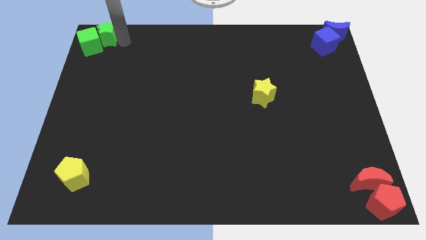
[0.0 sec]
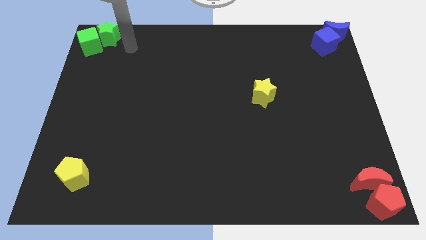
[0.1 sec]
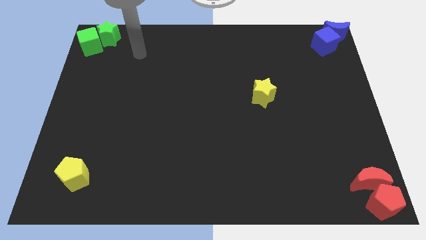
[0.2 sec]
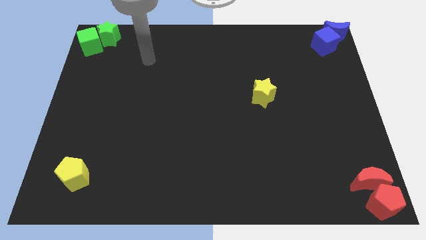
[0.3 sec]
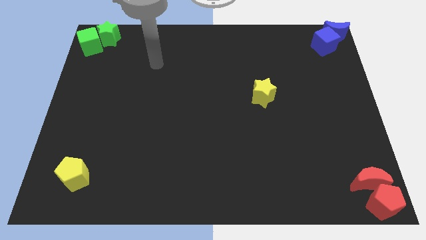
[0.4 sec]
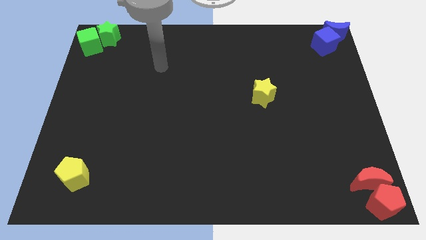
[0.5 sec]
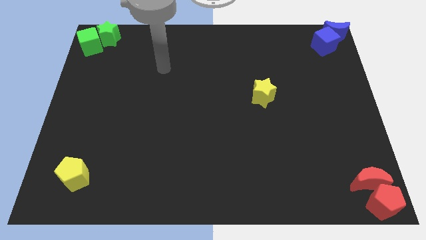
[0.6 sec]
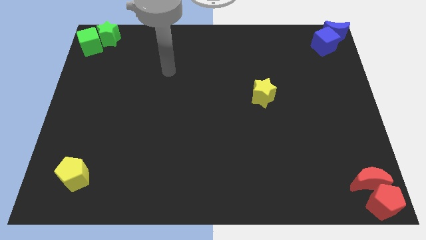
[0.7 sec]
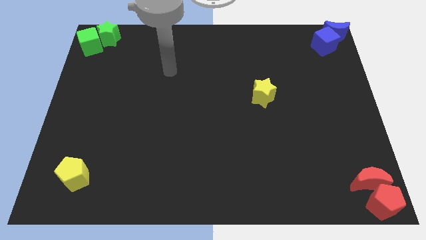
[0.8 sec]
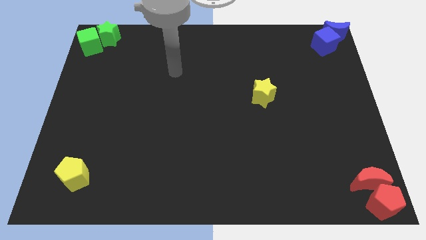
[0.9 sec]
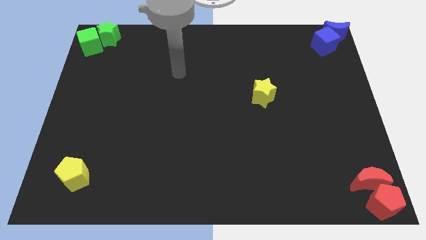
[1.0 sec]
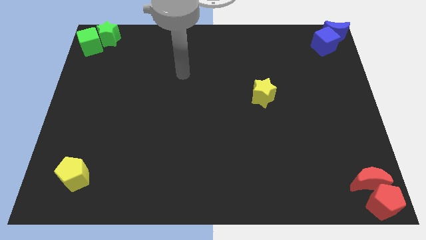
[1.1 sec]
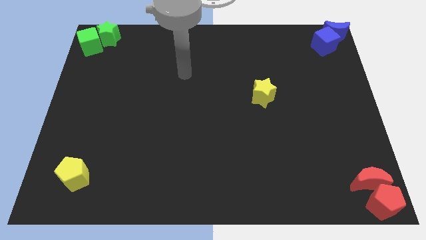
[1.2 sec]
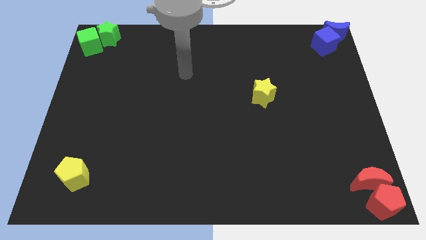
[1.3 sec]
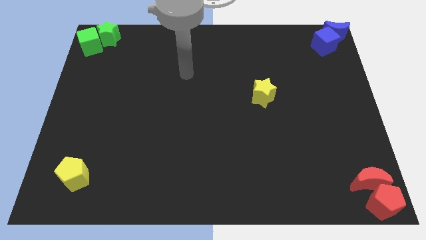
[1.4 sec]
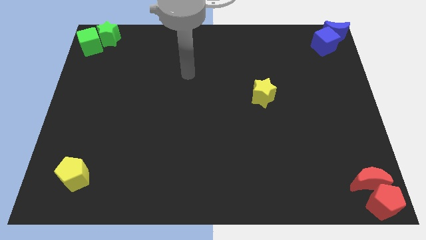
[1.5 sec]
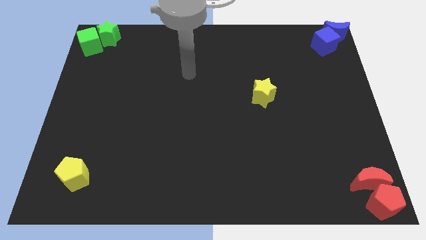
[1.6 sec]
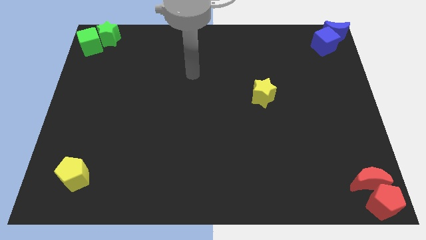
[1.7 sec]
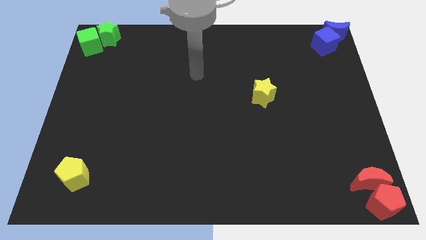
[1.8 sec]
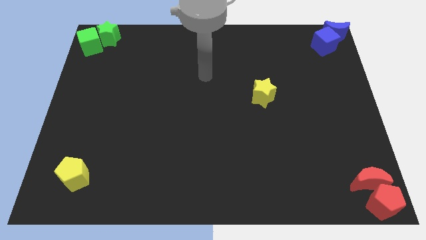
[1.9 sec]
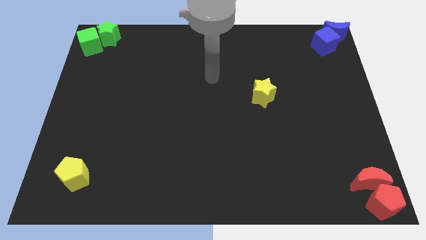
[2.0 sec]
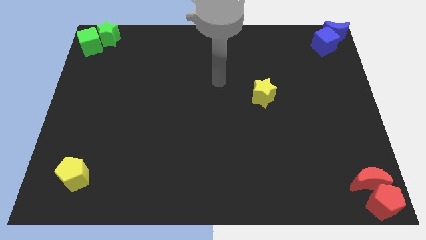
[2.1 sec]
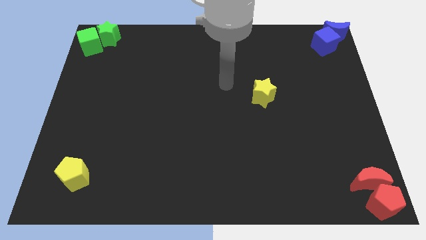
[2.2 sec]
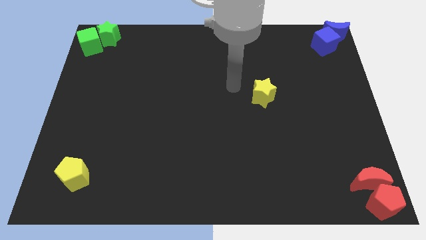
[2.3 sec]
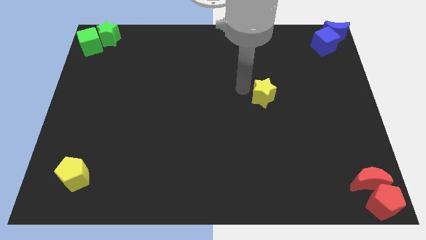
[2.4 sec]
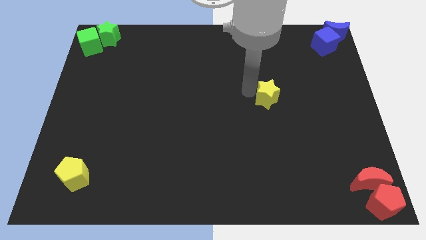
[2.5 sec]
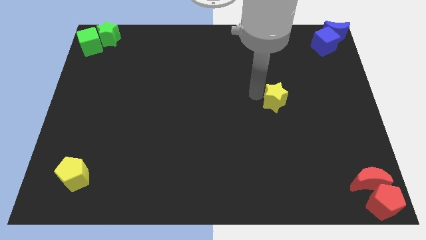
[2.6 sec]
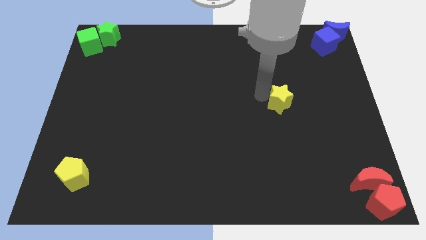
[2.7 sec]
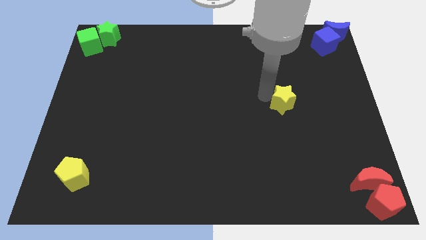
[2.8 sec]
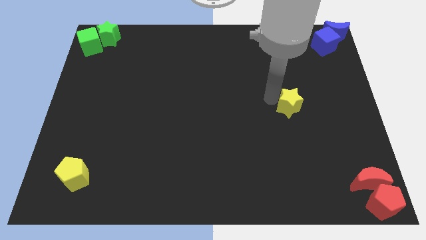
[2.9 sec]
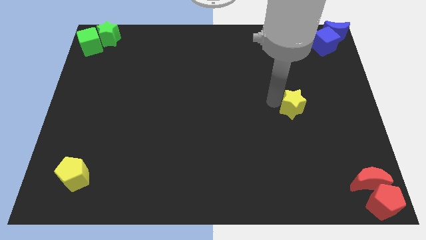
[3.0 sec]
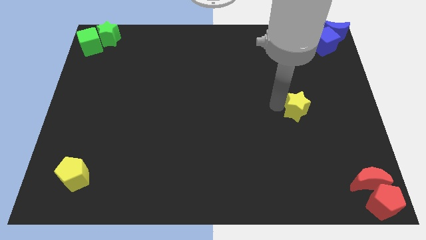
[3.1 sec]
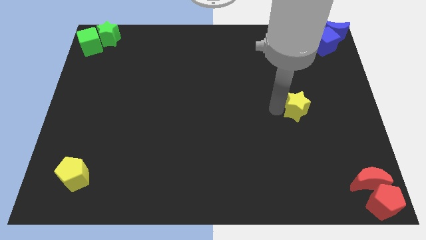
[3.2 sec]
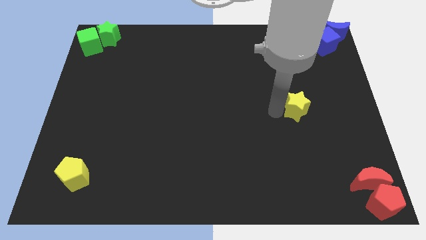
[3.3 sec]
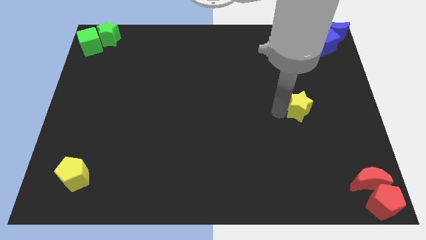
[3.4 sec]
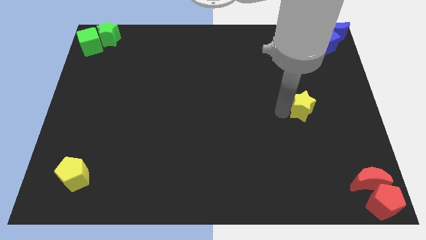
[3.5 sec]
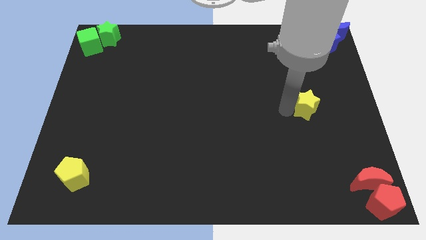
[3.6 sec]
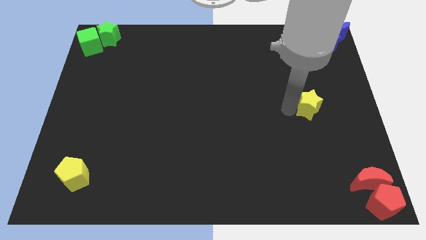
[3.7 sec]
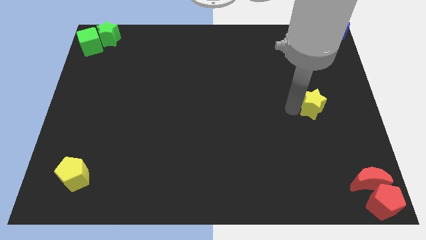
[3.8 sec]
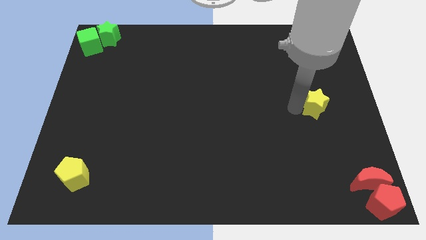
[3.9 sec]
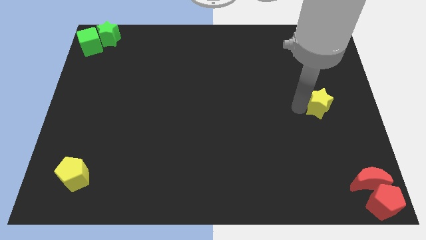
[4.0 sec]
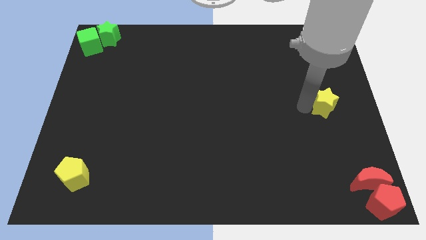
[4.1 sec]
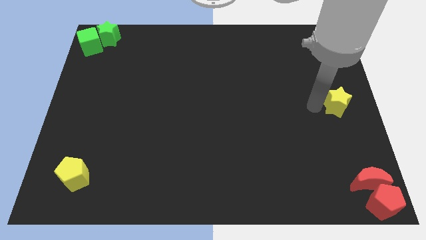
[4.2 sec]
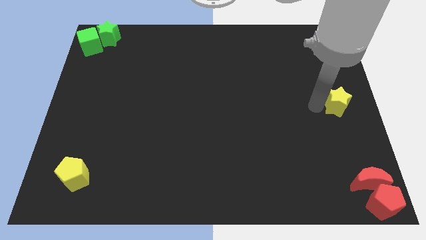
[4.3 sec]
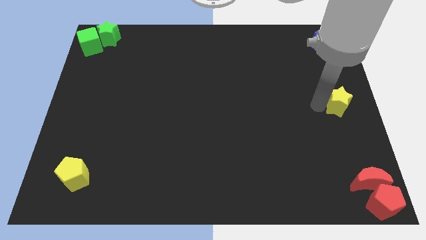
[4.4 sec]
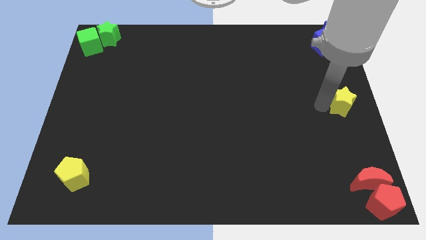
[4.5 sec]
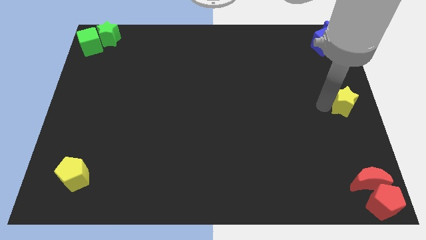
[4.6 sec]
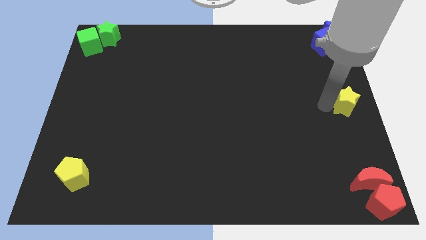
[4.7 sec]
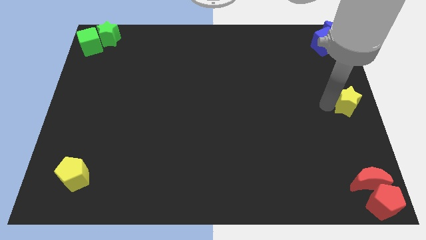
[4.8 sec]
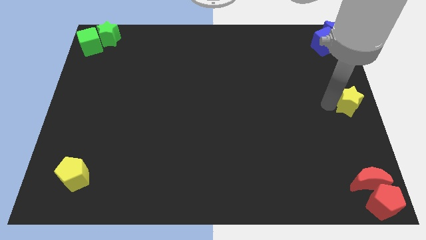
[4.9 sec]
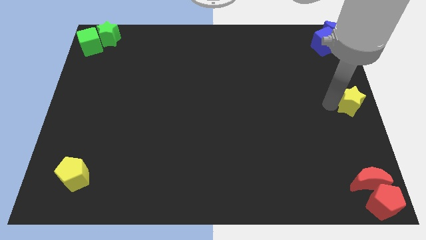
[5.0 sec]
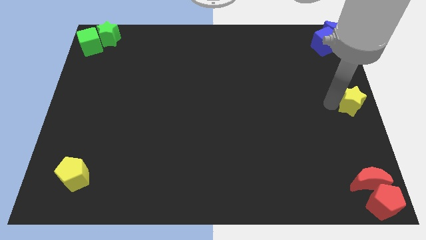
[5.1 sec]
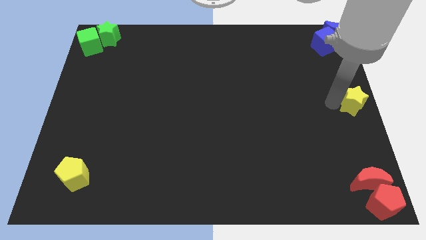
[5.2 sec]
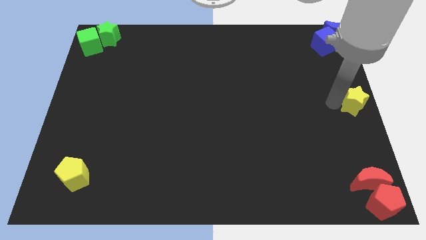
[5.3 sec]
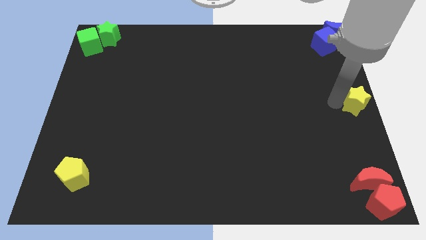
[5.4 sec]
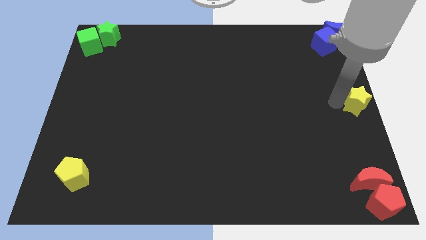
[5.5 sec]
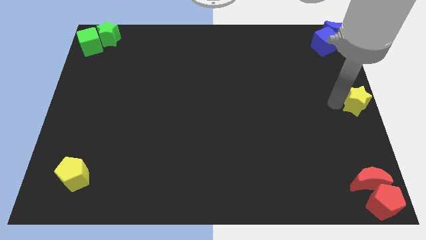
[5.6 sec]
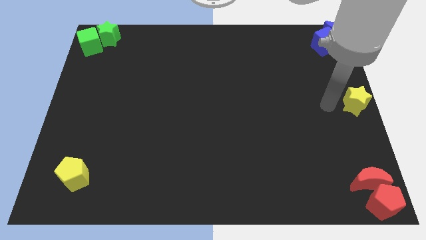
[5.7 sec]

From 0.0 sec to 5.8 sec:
push the yellow star towards the right center of the board

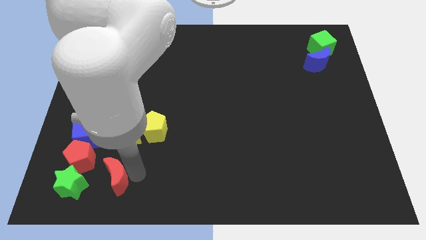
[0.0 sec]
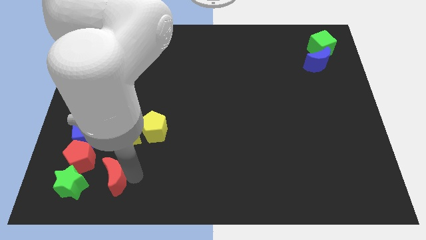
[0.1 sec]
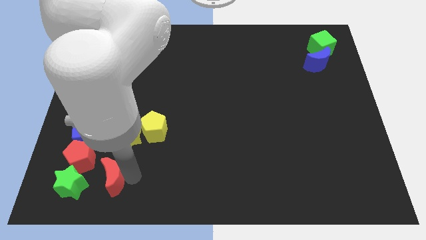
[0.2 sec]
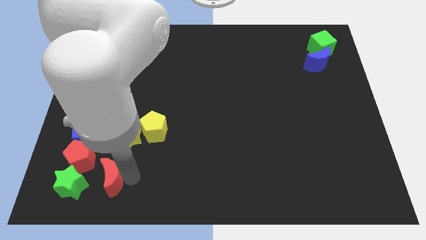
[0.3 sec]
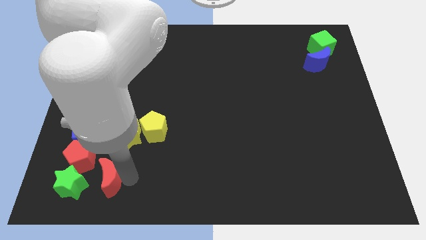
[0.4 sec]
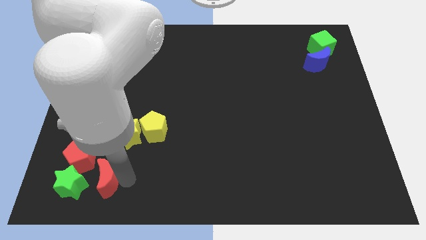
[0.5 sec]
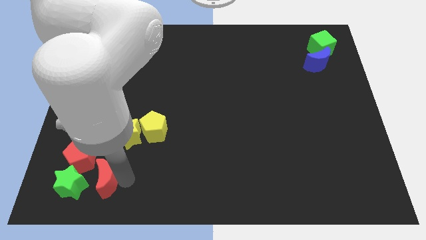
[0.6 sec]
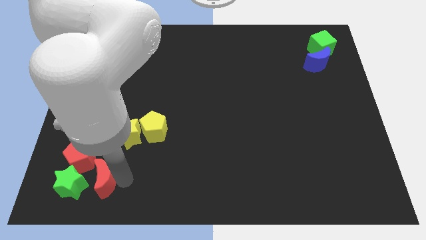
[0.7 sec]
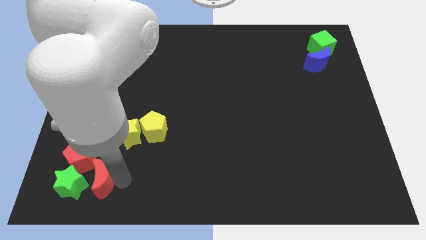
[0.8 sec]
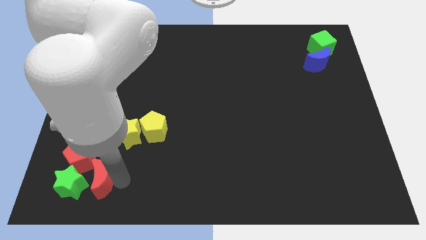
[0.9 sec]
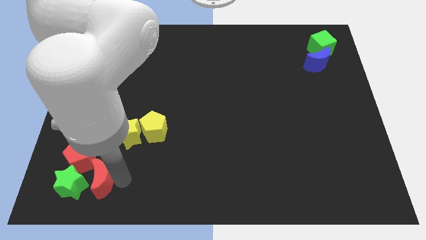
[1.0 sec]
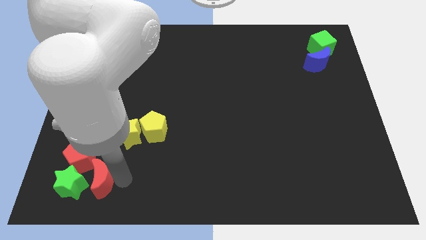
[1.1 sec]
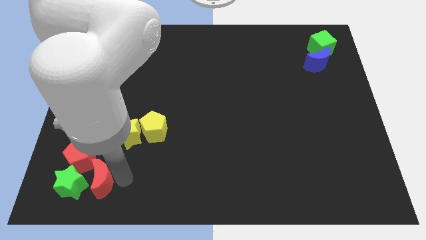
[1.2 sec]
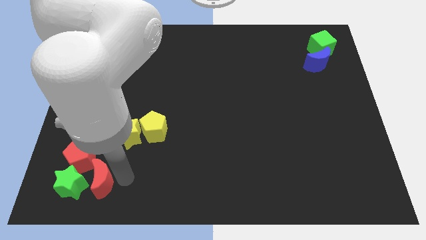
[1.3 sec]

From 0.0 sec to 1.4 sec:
place the red crescent close to the red pentagon and green star

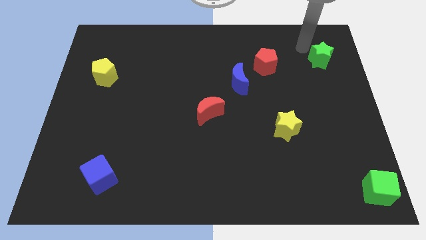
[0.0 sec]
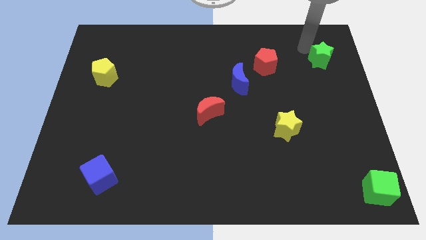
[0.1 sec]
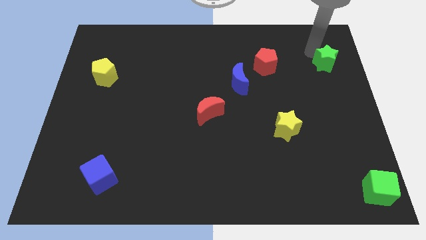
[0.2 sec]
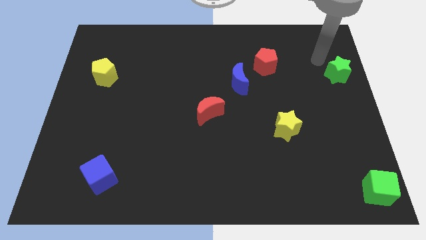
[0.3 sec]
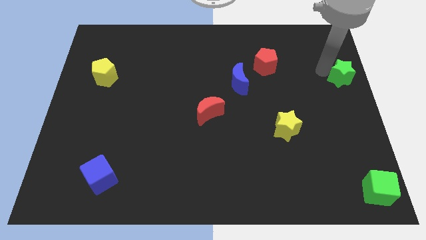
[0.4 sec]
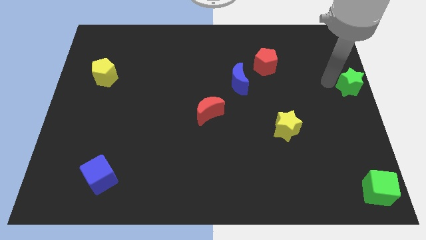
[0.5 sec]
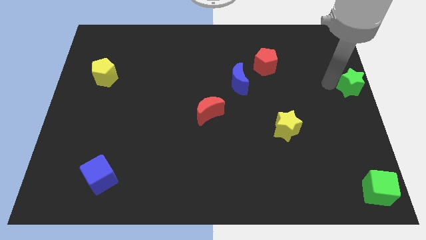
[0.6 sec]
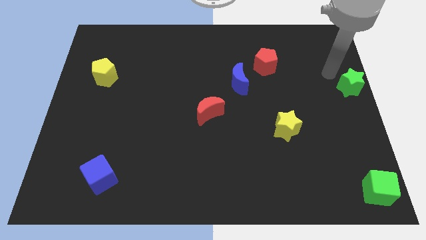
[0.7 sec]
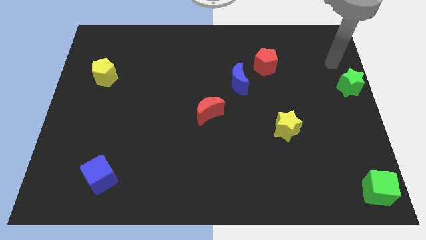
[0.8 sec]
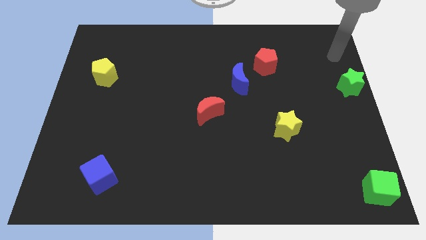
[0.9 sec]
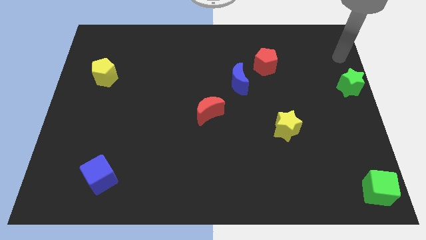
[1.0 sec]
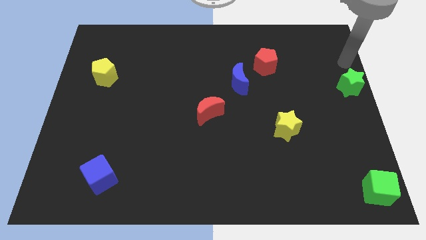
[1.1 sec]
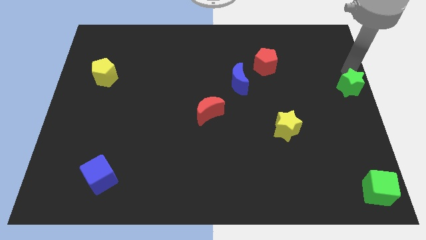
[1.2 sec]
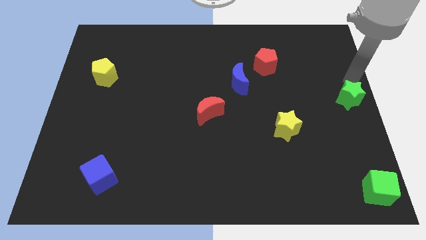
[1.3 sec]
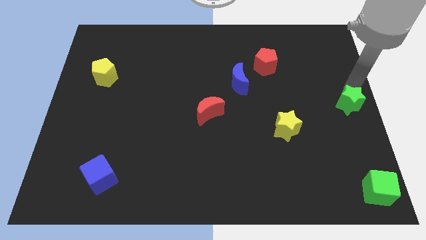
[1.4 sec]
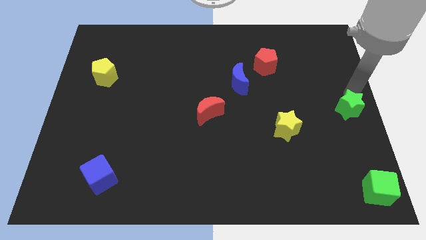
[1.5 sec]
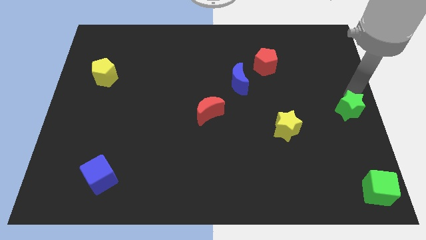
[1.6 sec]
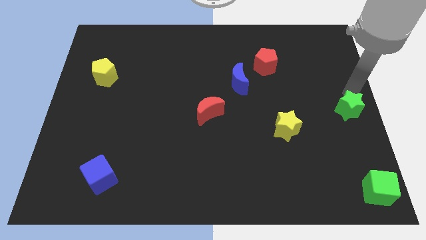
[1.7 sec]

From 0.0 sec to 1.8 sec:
place the green star to the right center of the board

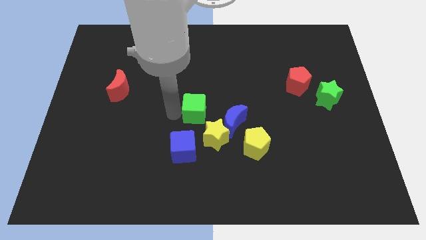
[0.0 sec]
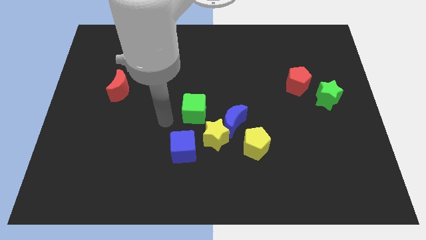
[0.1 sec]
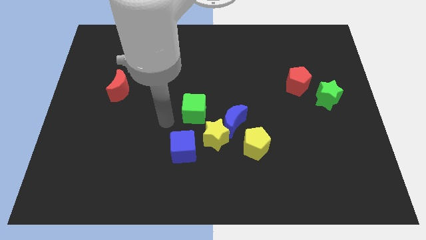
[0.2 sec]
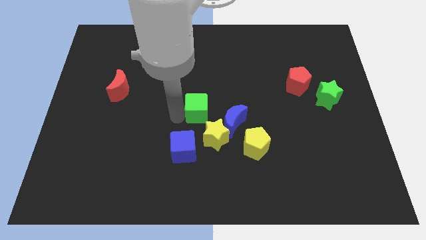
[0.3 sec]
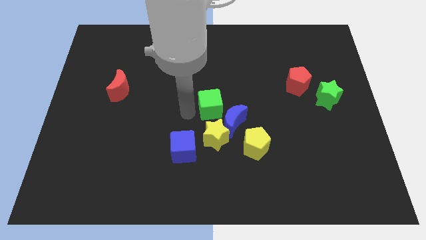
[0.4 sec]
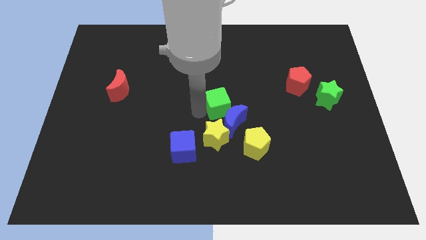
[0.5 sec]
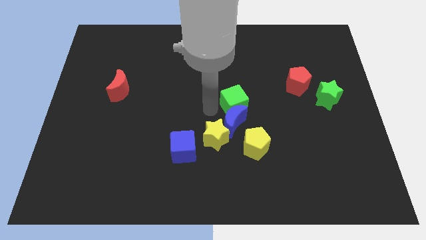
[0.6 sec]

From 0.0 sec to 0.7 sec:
place green cube above blue crescent
